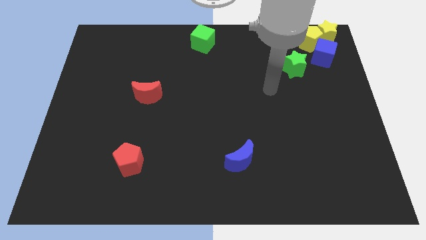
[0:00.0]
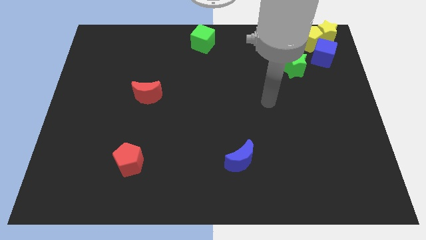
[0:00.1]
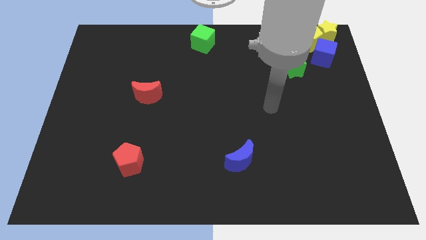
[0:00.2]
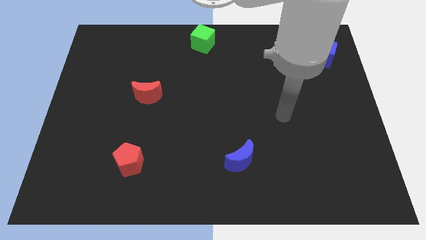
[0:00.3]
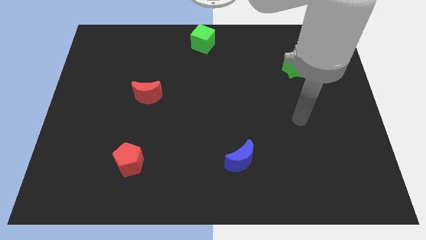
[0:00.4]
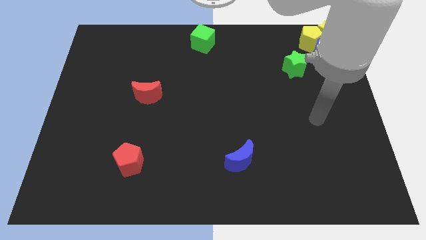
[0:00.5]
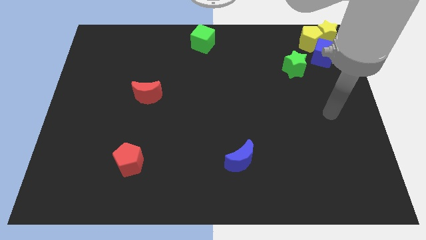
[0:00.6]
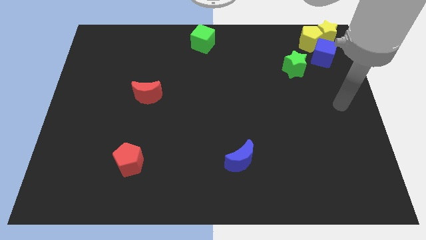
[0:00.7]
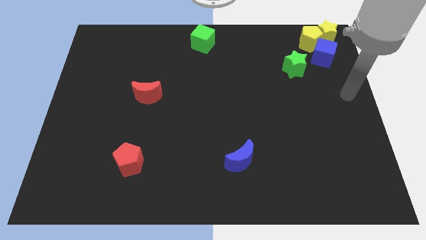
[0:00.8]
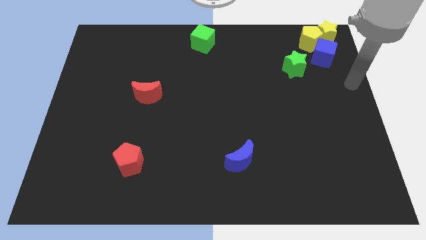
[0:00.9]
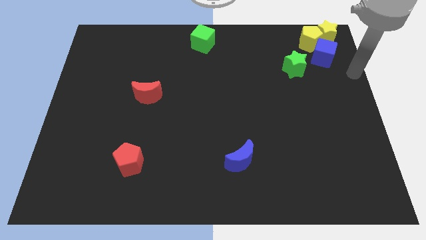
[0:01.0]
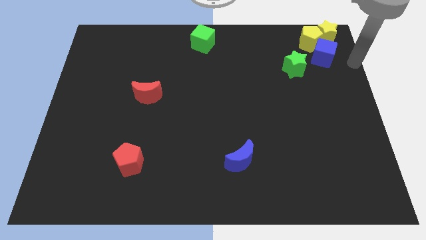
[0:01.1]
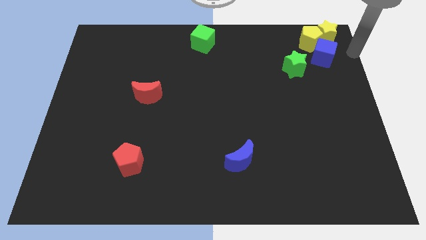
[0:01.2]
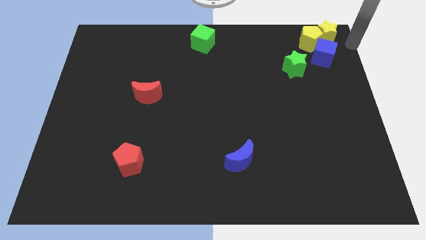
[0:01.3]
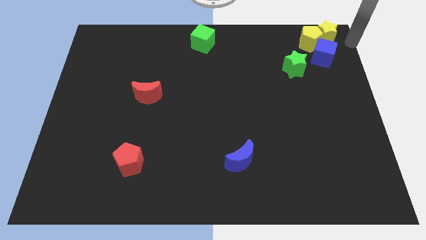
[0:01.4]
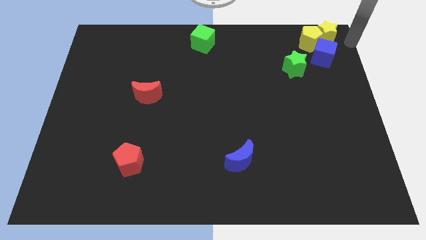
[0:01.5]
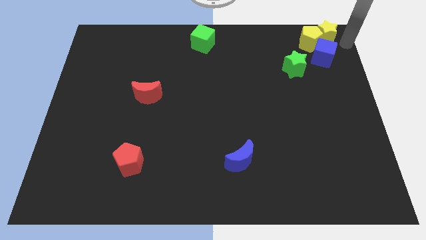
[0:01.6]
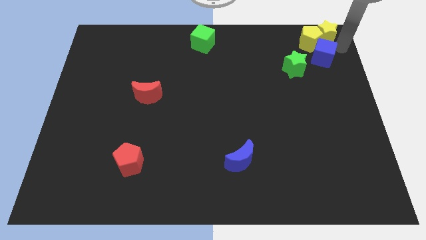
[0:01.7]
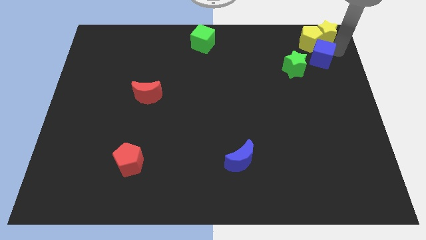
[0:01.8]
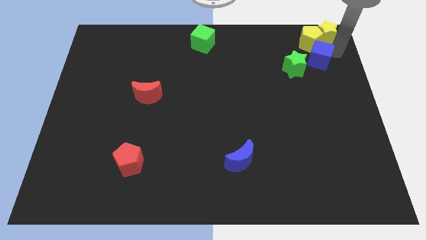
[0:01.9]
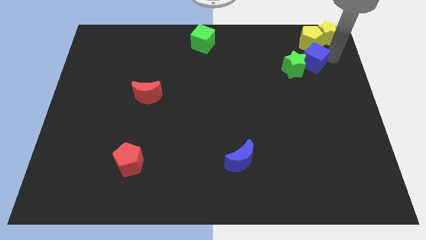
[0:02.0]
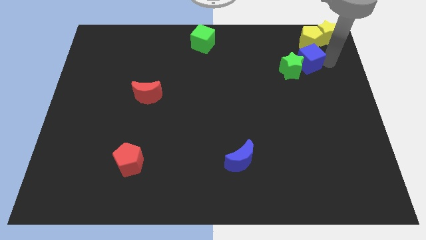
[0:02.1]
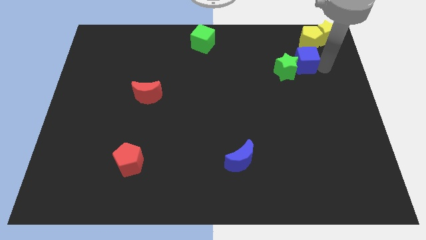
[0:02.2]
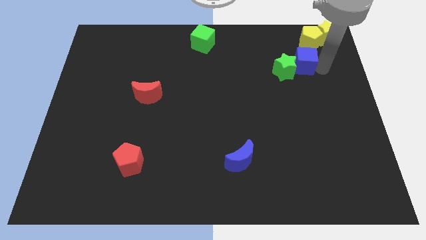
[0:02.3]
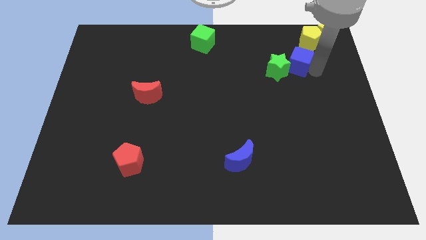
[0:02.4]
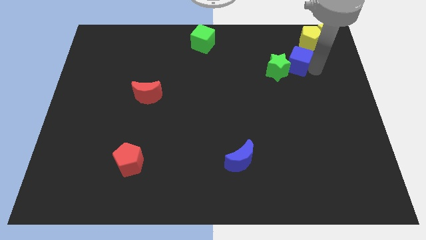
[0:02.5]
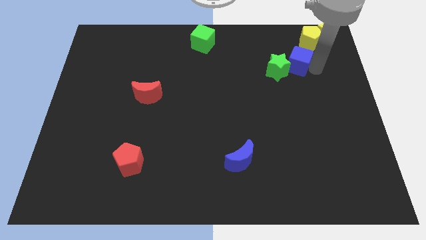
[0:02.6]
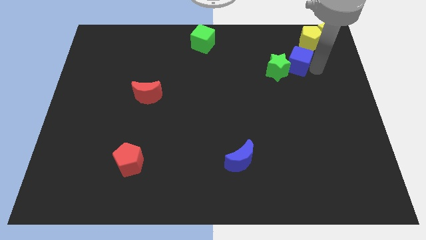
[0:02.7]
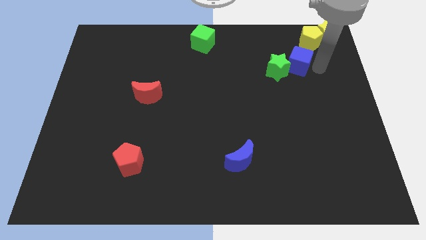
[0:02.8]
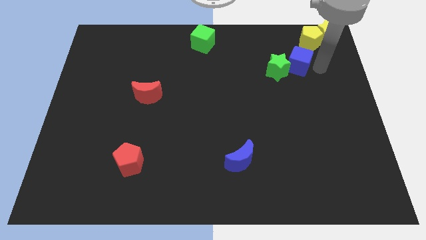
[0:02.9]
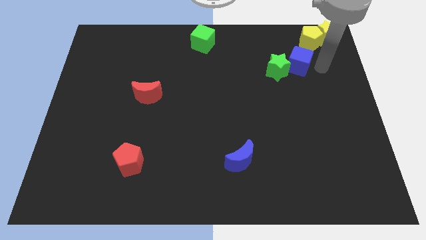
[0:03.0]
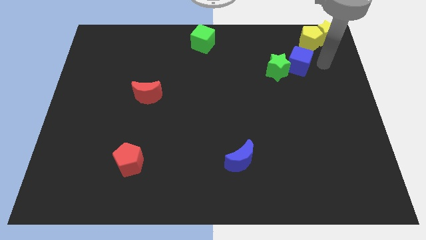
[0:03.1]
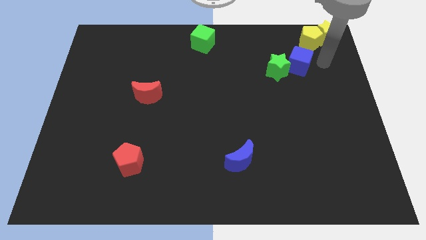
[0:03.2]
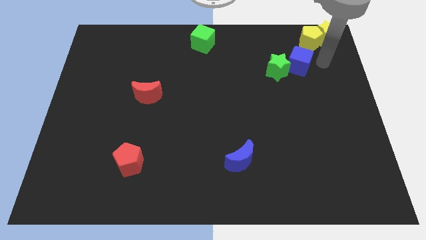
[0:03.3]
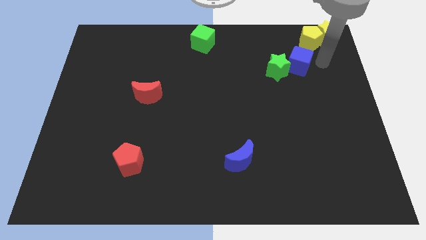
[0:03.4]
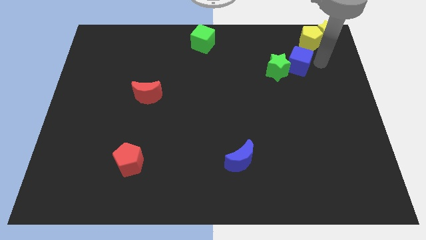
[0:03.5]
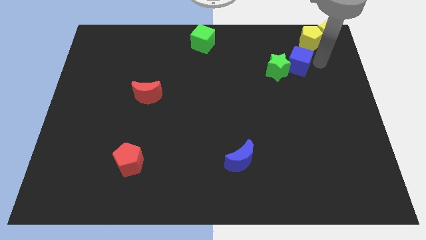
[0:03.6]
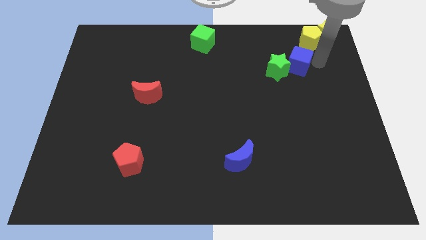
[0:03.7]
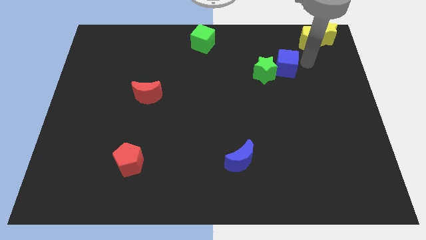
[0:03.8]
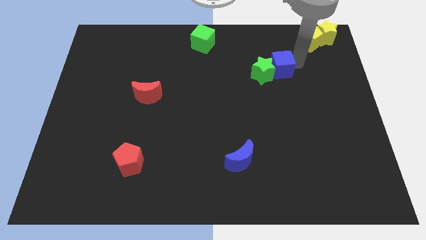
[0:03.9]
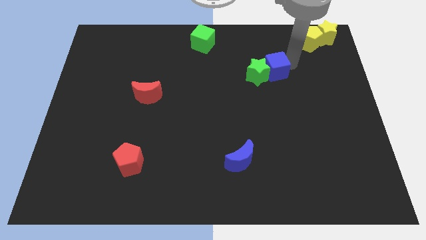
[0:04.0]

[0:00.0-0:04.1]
push blue cube slightly to the left

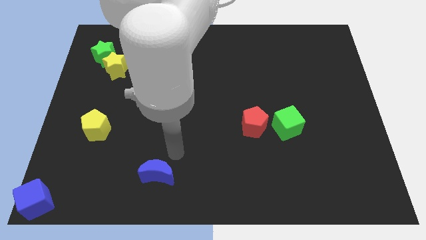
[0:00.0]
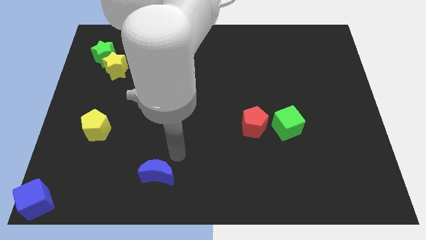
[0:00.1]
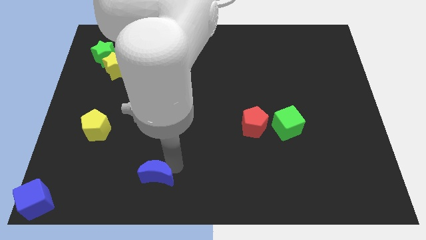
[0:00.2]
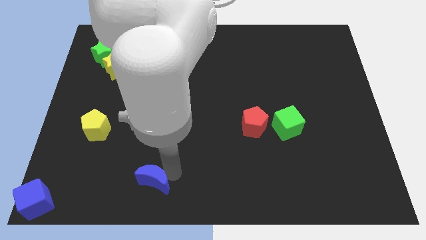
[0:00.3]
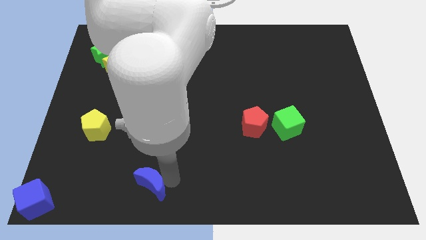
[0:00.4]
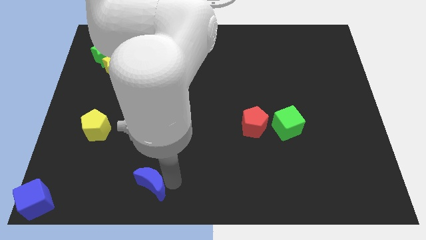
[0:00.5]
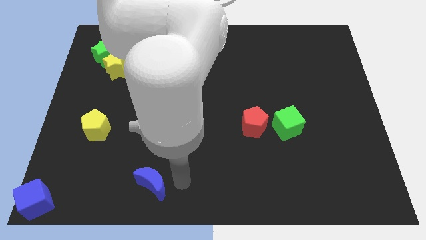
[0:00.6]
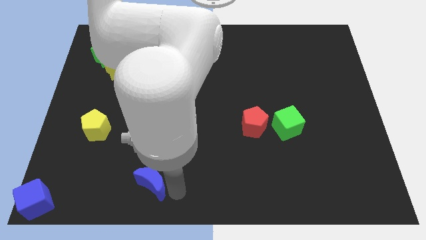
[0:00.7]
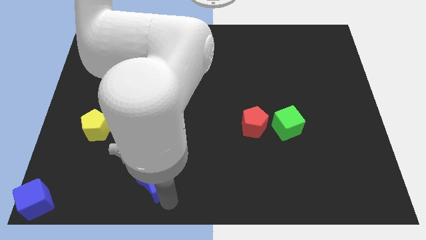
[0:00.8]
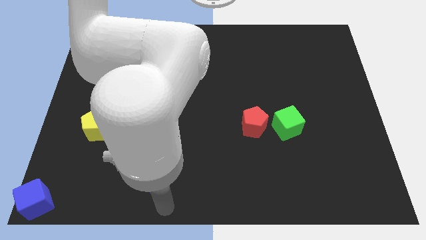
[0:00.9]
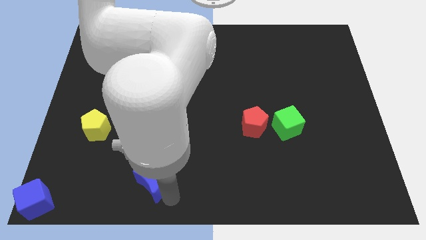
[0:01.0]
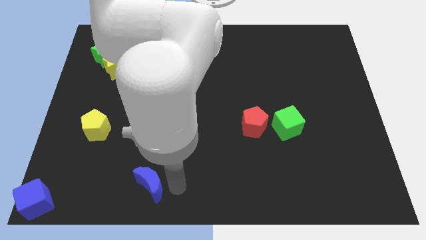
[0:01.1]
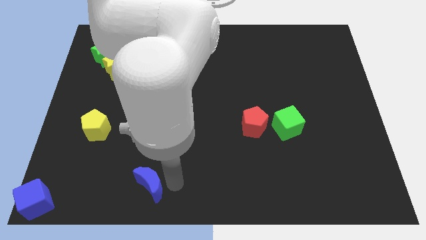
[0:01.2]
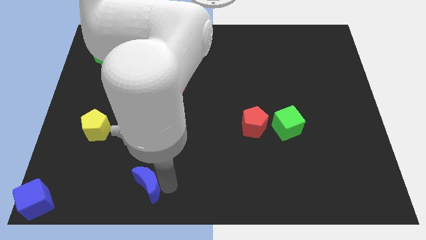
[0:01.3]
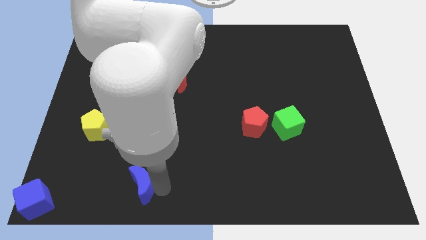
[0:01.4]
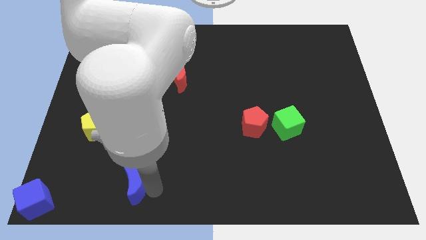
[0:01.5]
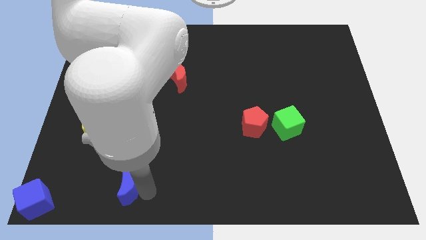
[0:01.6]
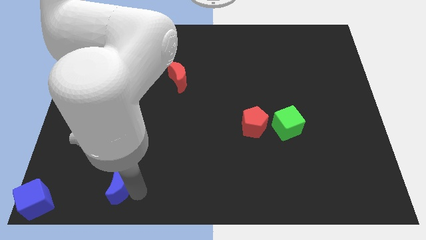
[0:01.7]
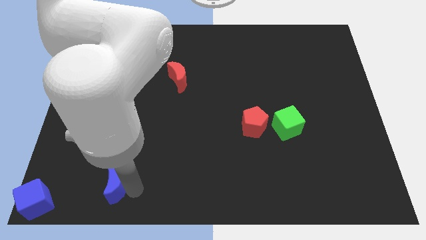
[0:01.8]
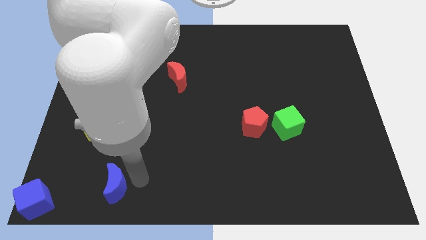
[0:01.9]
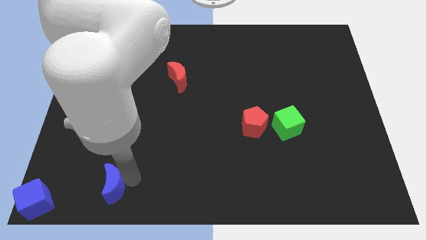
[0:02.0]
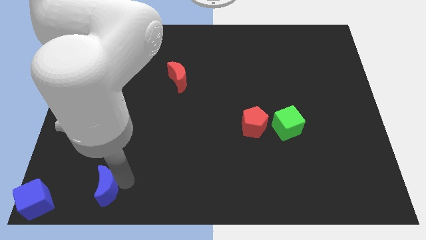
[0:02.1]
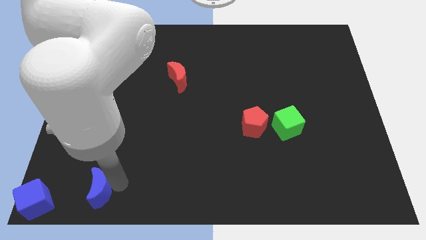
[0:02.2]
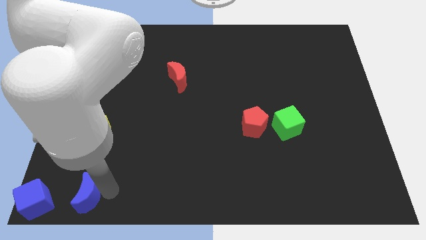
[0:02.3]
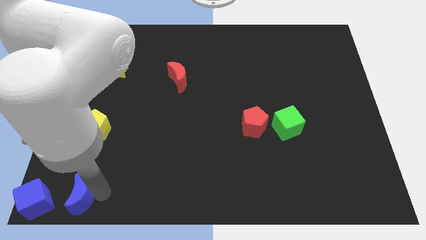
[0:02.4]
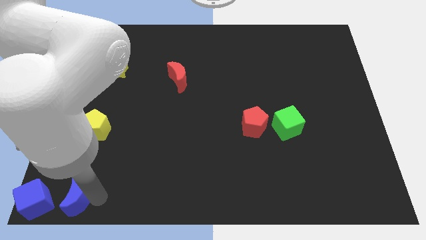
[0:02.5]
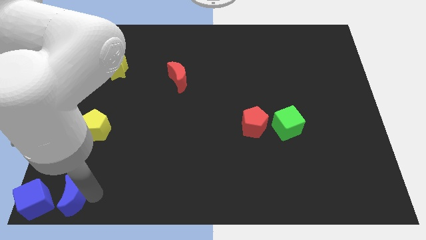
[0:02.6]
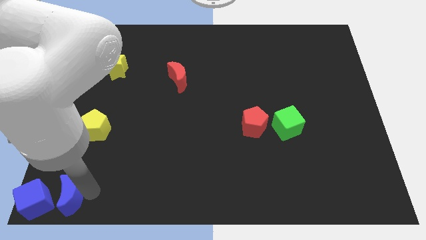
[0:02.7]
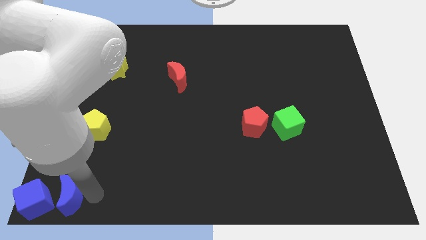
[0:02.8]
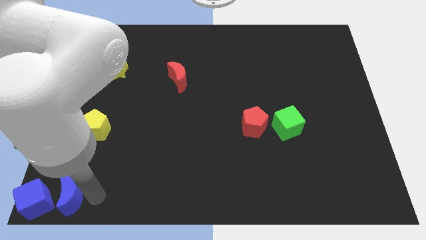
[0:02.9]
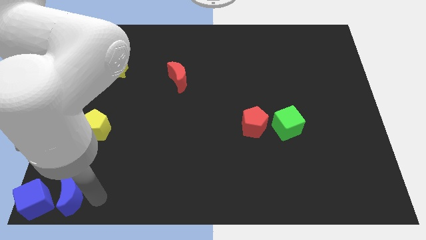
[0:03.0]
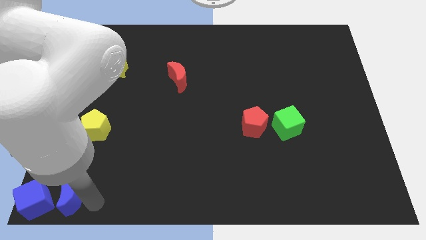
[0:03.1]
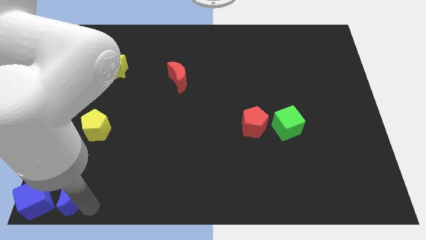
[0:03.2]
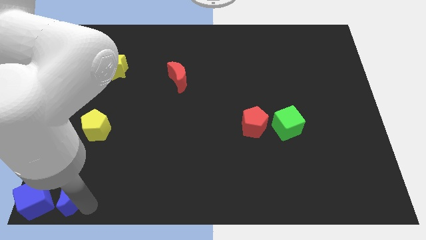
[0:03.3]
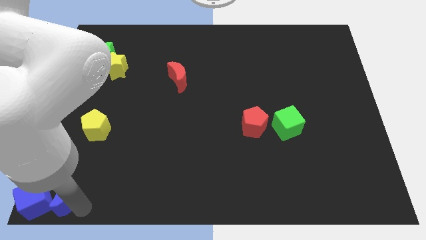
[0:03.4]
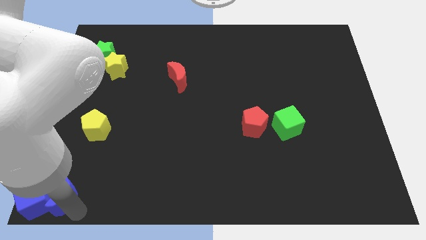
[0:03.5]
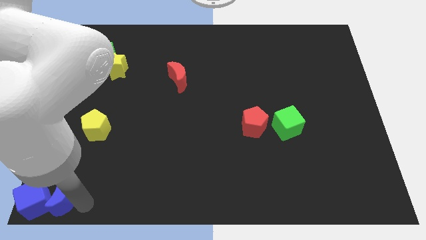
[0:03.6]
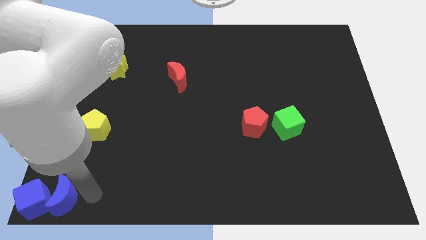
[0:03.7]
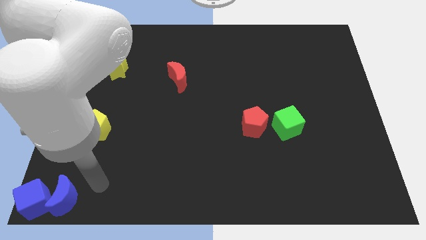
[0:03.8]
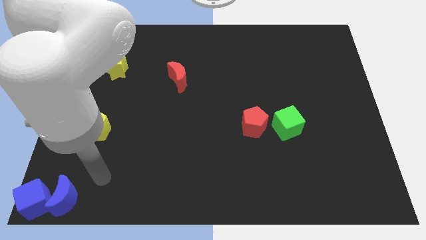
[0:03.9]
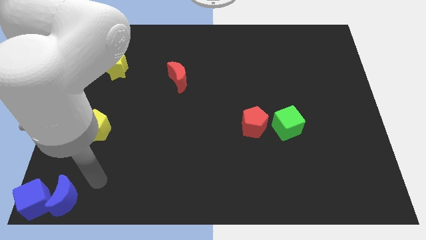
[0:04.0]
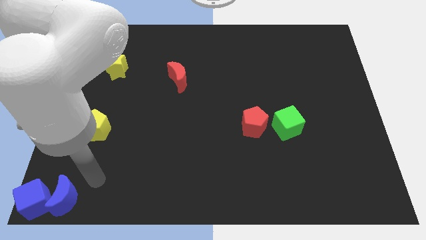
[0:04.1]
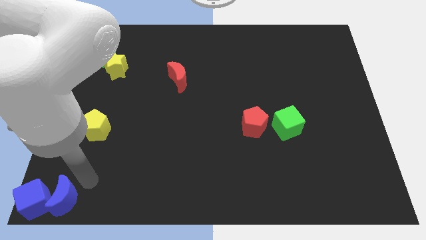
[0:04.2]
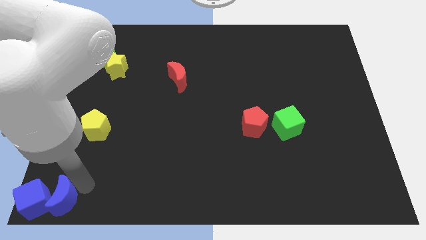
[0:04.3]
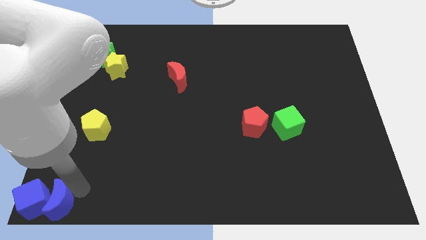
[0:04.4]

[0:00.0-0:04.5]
push the blue crescent to the right of the blue cube

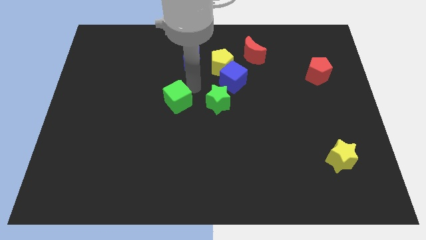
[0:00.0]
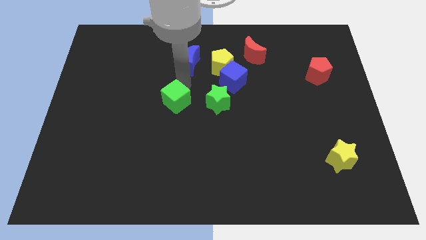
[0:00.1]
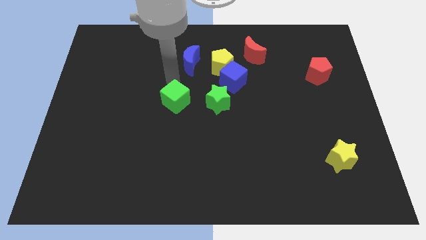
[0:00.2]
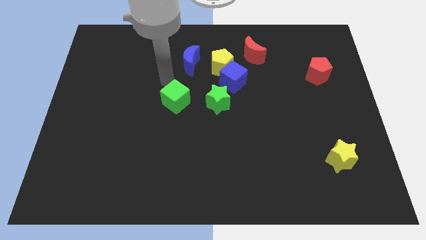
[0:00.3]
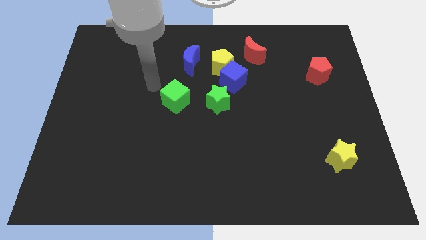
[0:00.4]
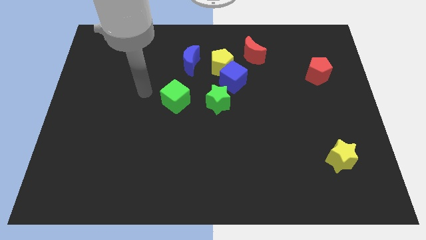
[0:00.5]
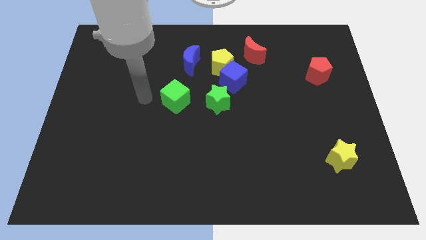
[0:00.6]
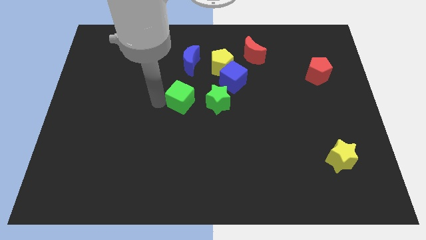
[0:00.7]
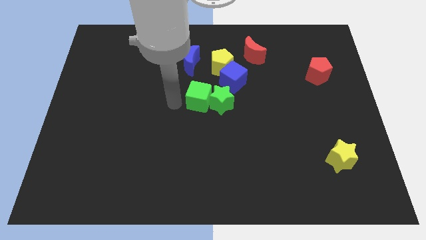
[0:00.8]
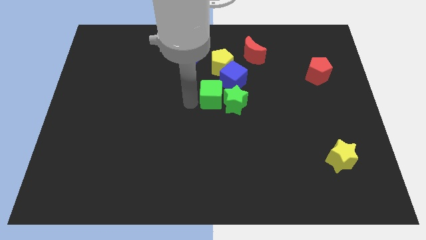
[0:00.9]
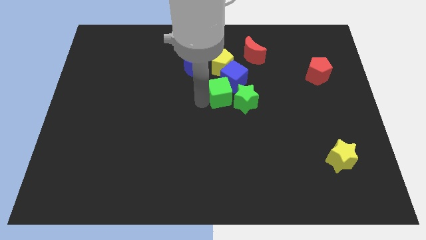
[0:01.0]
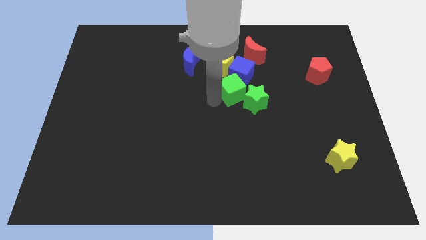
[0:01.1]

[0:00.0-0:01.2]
push the green cube into the green star
